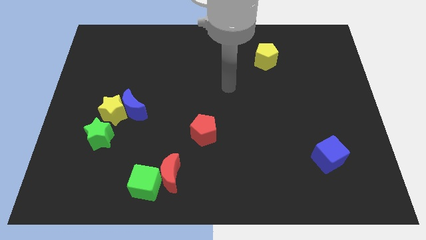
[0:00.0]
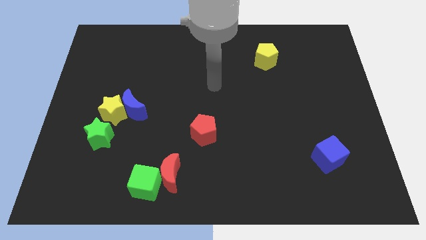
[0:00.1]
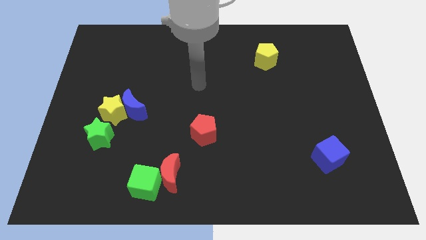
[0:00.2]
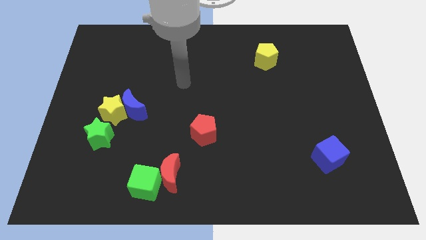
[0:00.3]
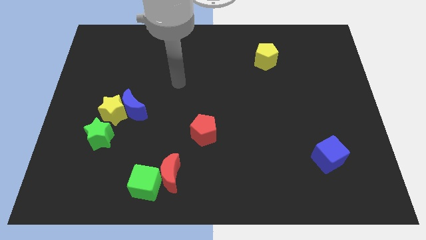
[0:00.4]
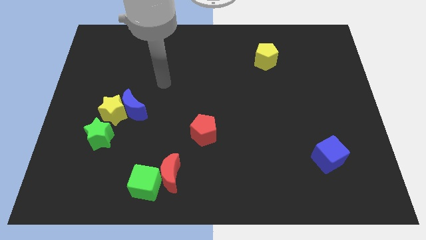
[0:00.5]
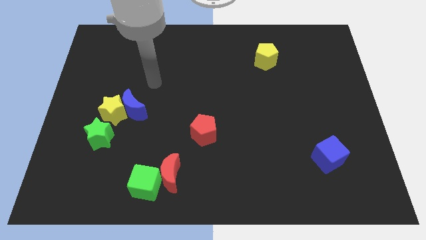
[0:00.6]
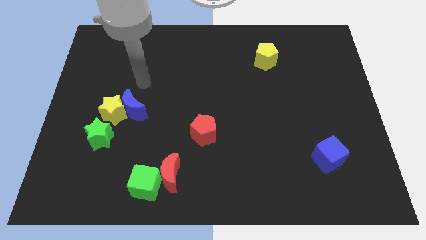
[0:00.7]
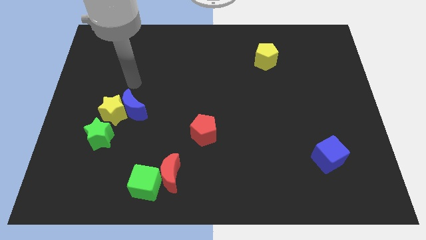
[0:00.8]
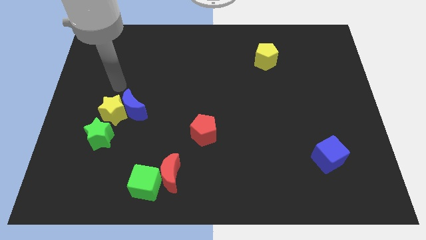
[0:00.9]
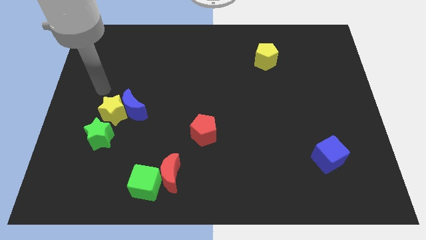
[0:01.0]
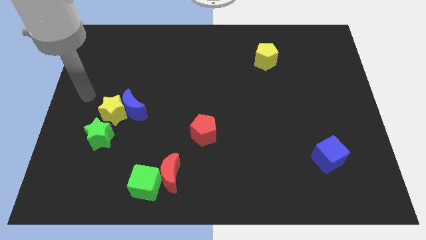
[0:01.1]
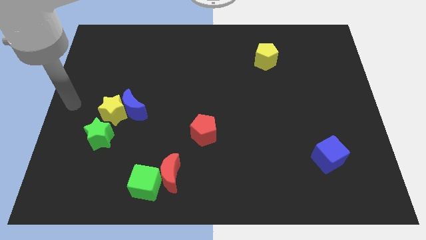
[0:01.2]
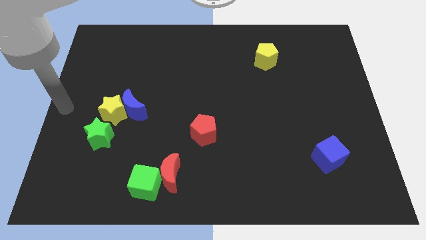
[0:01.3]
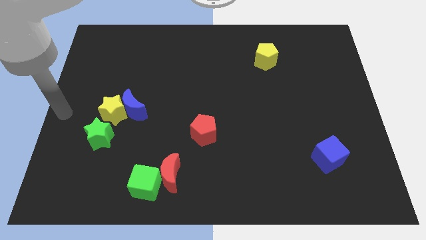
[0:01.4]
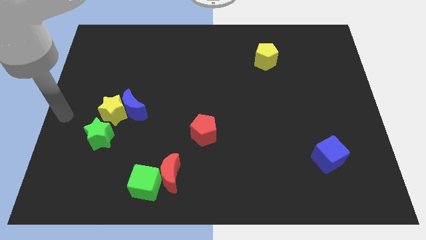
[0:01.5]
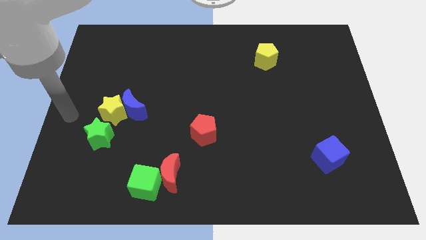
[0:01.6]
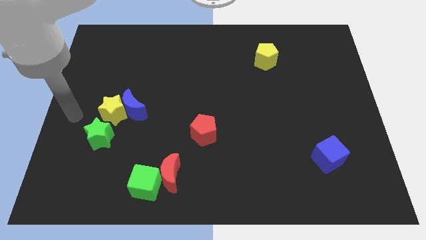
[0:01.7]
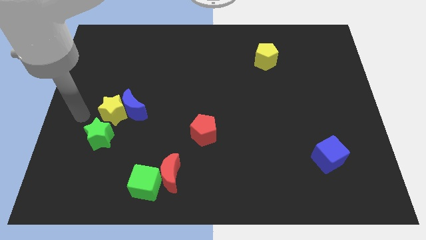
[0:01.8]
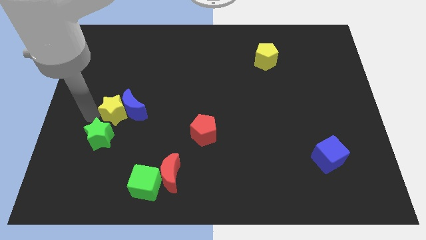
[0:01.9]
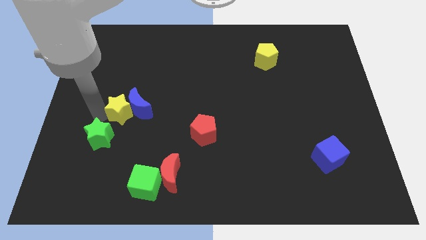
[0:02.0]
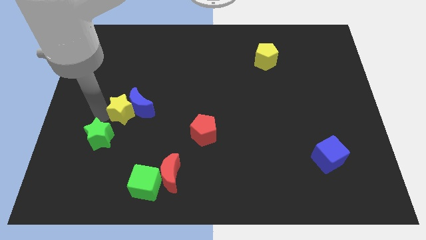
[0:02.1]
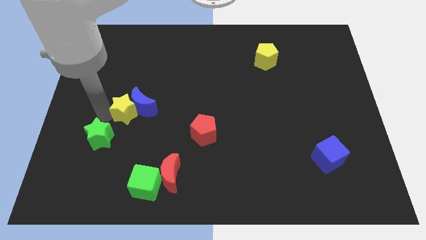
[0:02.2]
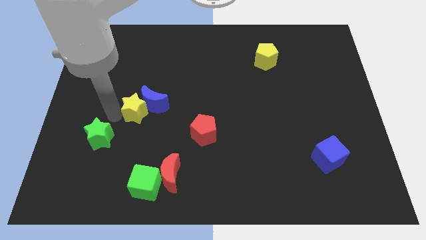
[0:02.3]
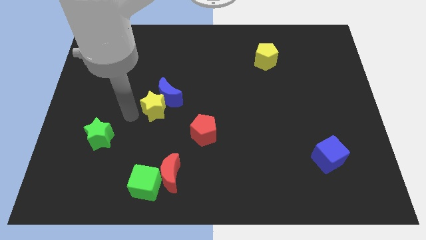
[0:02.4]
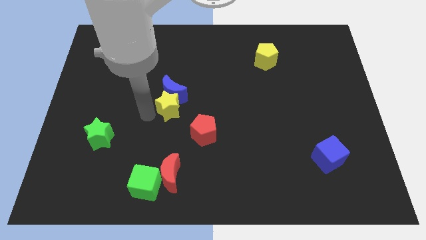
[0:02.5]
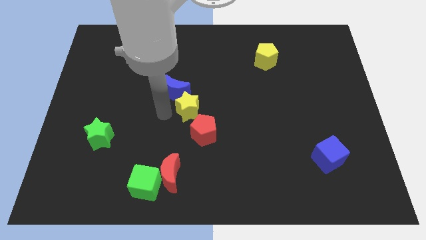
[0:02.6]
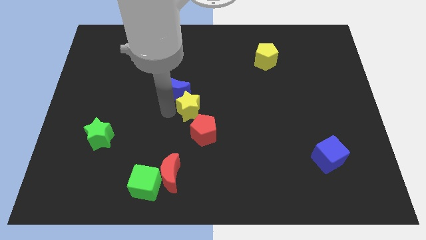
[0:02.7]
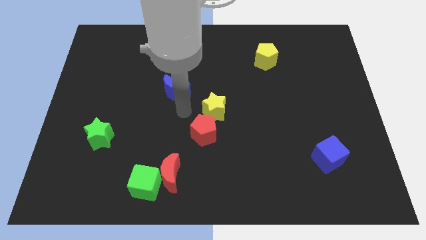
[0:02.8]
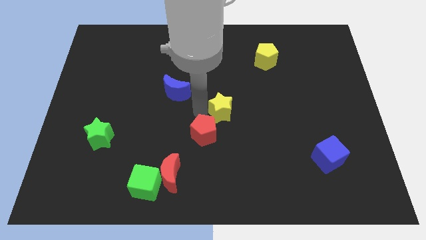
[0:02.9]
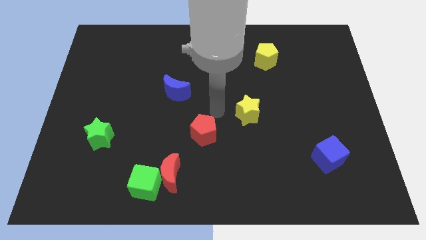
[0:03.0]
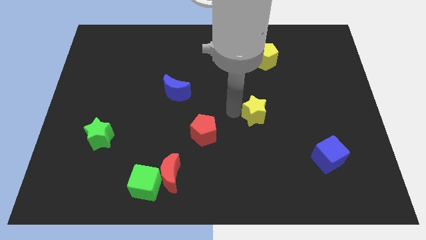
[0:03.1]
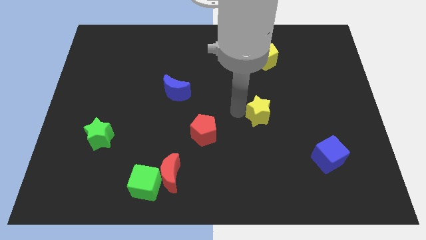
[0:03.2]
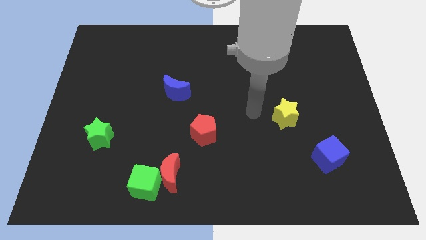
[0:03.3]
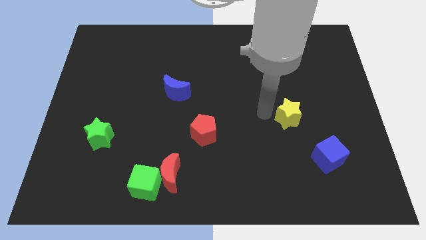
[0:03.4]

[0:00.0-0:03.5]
move the yellow star away from the blue moon

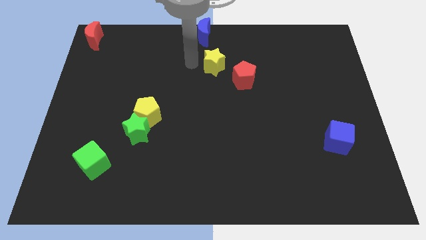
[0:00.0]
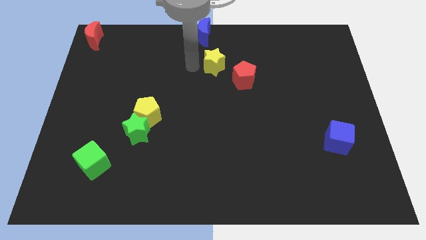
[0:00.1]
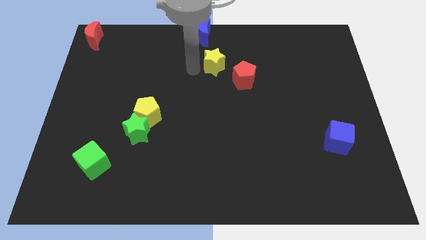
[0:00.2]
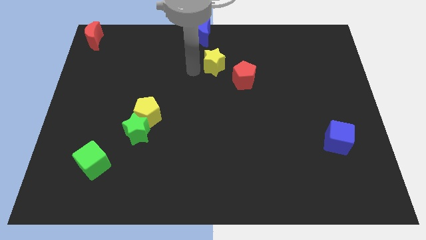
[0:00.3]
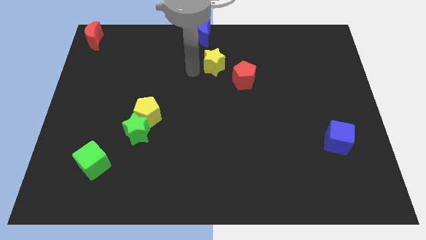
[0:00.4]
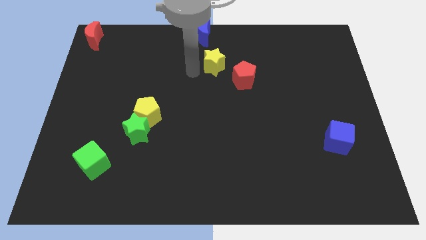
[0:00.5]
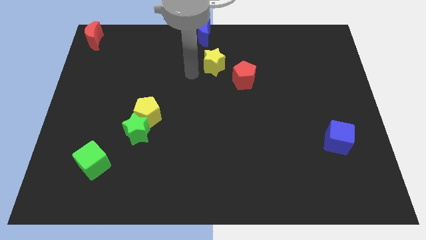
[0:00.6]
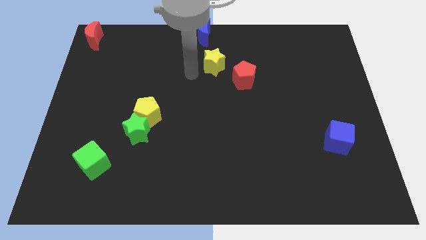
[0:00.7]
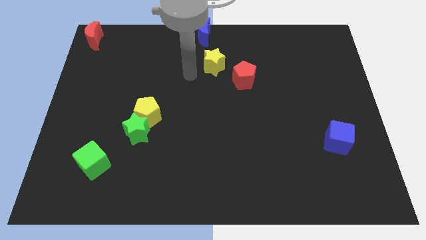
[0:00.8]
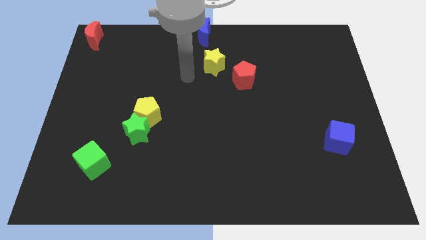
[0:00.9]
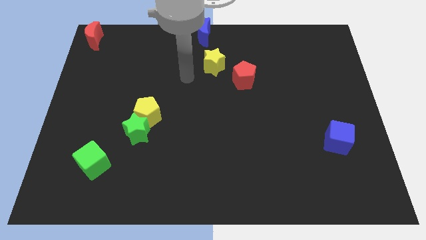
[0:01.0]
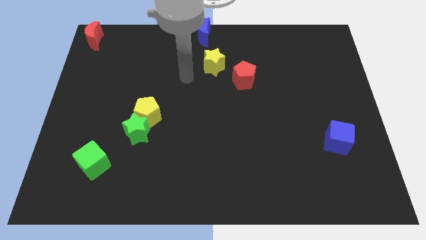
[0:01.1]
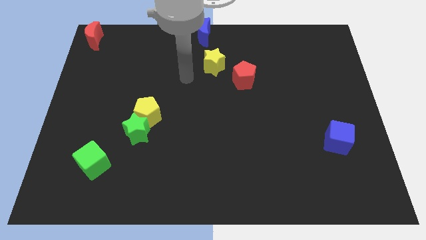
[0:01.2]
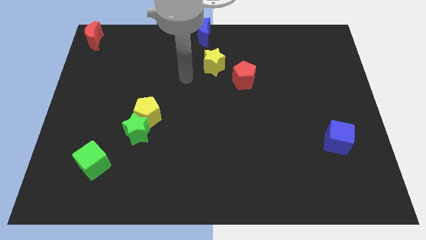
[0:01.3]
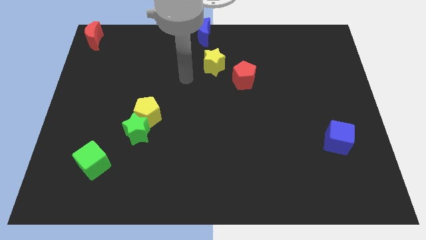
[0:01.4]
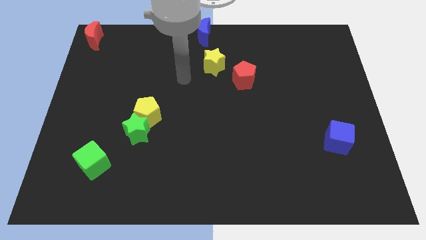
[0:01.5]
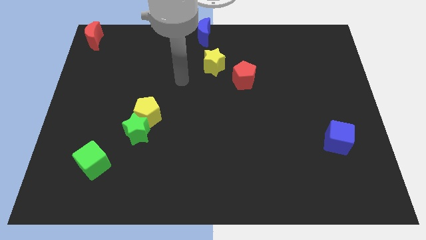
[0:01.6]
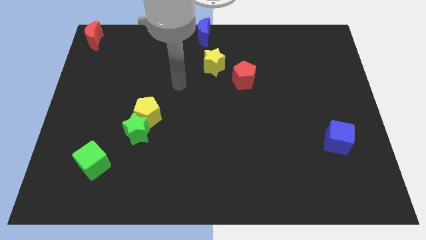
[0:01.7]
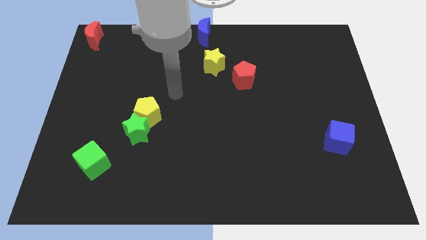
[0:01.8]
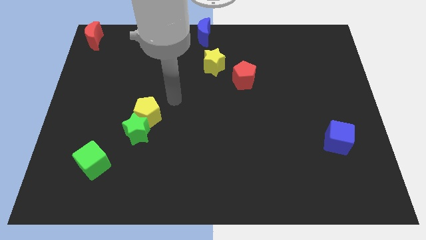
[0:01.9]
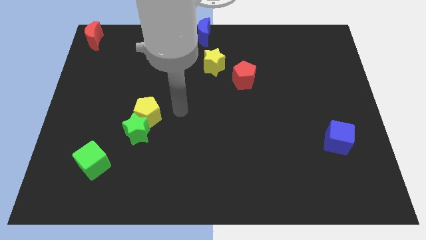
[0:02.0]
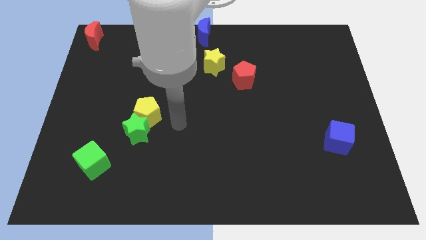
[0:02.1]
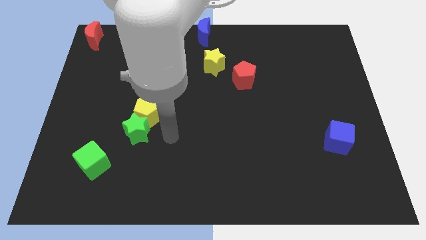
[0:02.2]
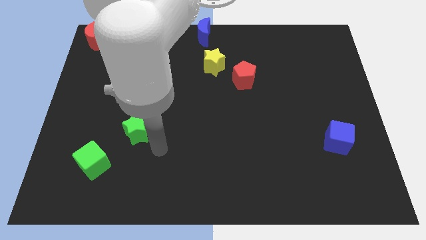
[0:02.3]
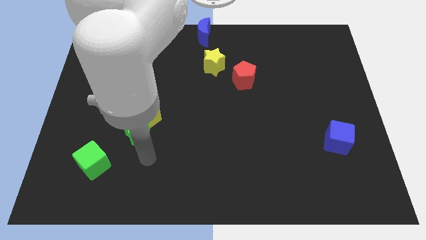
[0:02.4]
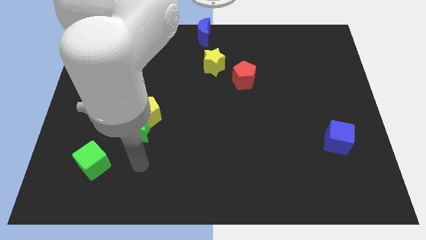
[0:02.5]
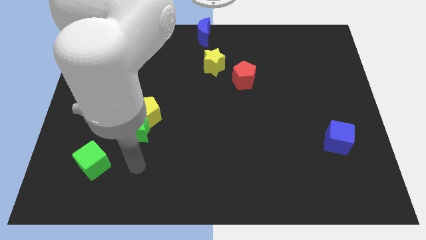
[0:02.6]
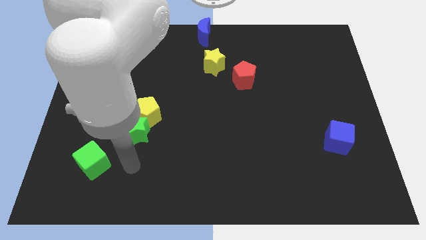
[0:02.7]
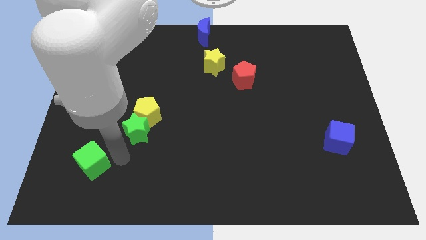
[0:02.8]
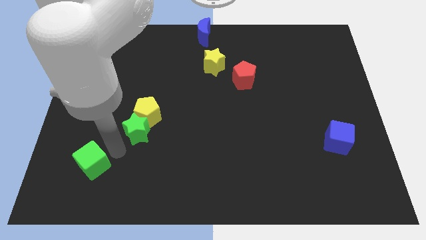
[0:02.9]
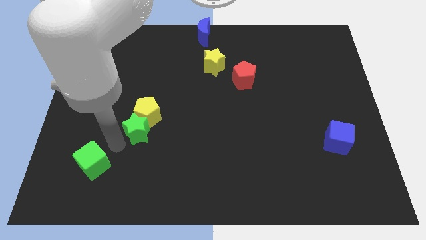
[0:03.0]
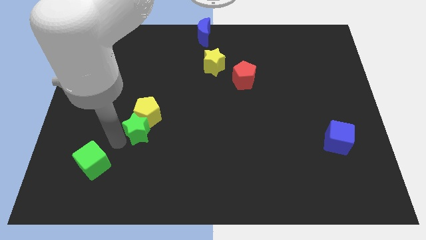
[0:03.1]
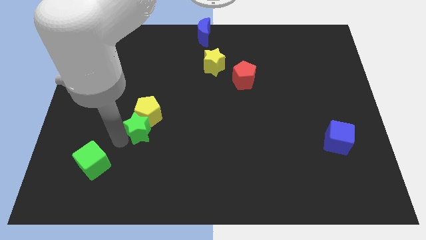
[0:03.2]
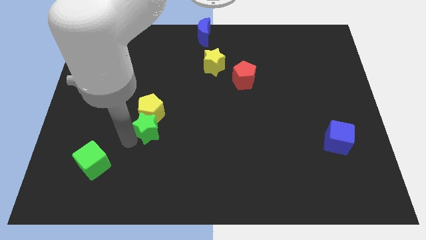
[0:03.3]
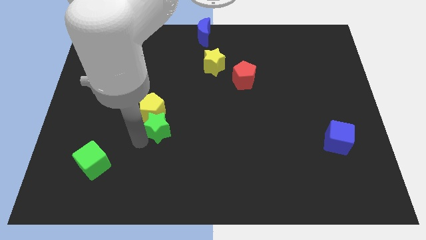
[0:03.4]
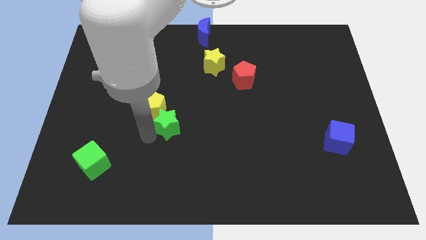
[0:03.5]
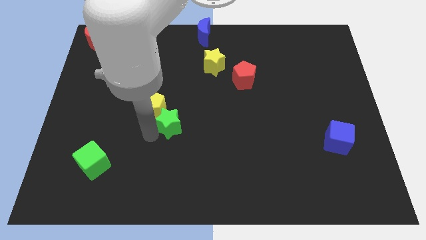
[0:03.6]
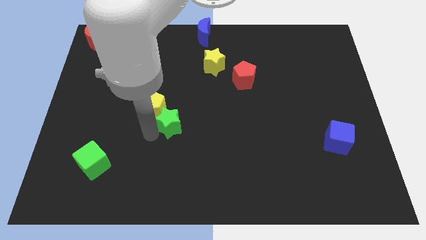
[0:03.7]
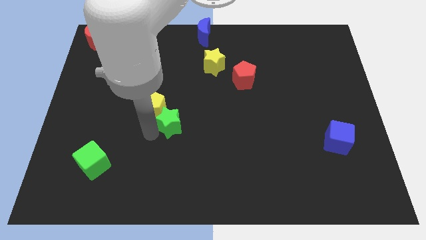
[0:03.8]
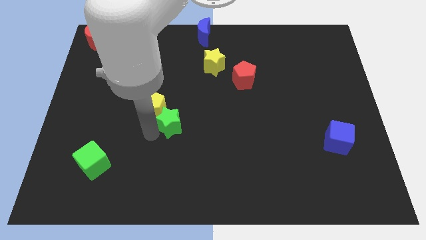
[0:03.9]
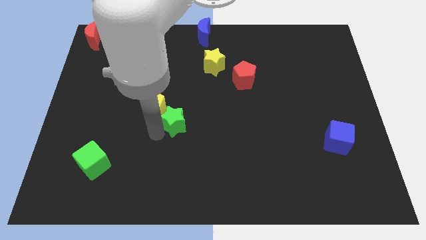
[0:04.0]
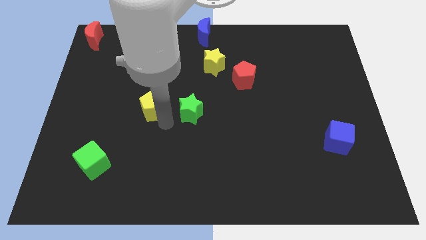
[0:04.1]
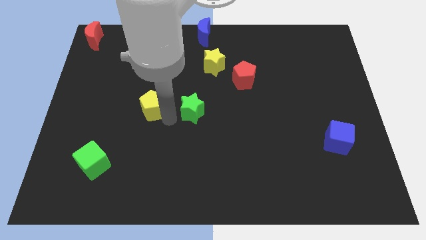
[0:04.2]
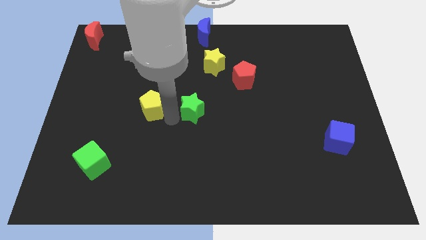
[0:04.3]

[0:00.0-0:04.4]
move the green star to the center of the board

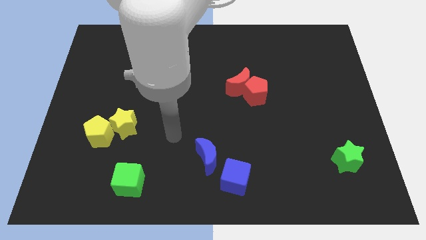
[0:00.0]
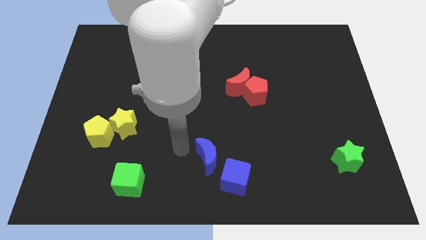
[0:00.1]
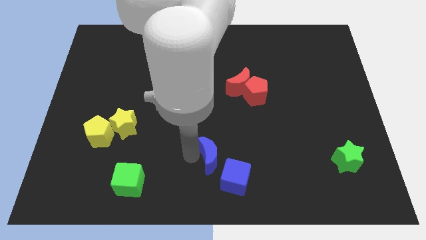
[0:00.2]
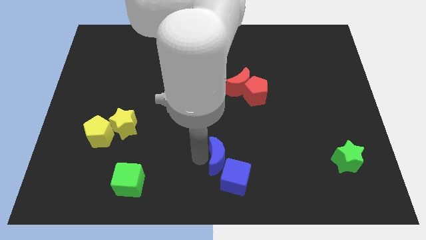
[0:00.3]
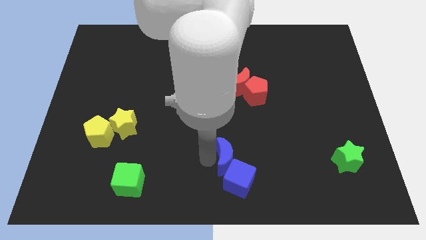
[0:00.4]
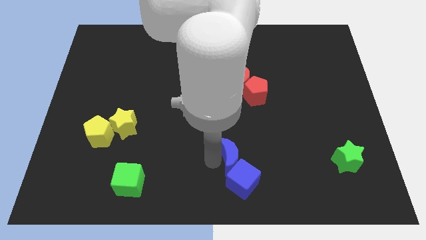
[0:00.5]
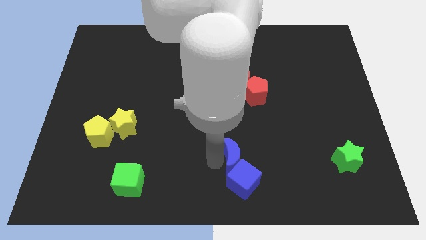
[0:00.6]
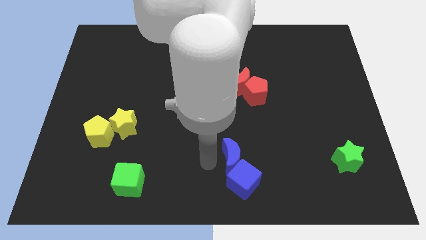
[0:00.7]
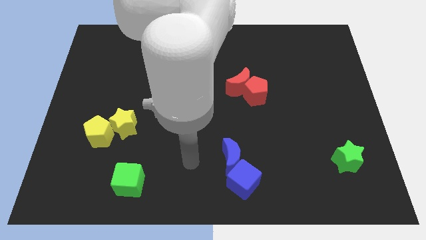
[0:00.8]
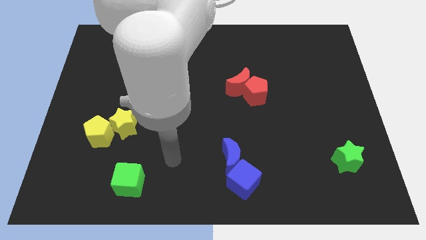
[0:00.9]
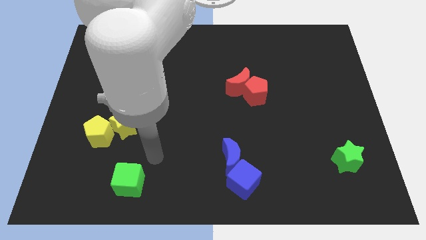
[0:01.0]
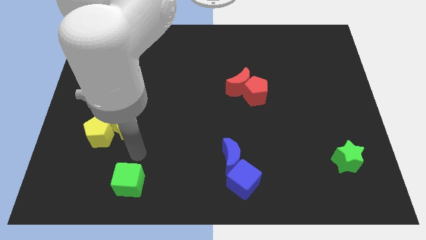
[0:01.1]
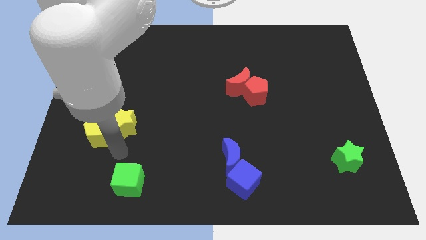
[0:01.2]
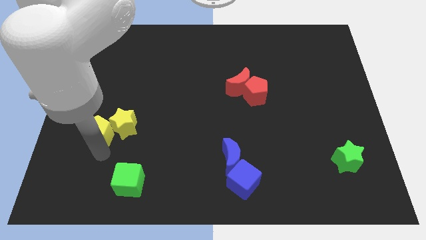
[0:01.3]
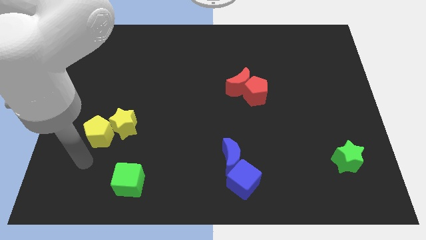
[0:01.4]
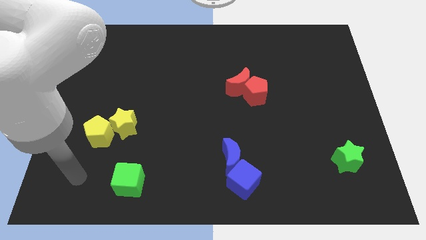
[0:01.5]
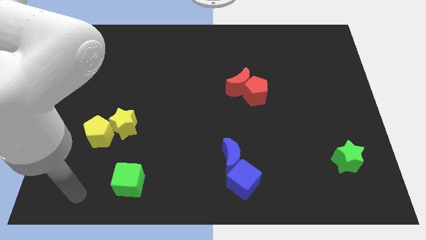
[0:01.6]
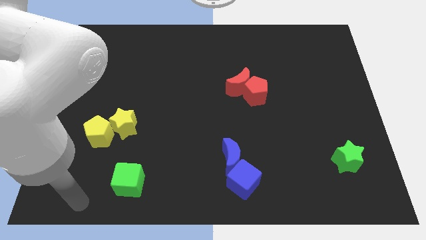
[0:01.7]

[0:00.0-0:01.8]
push the blue blocks and move away from them
